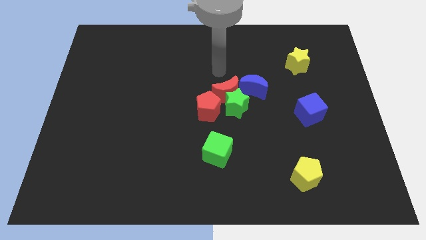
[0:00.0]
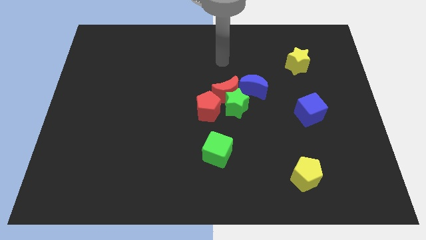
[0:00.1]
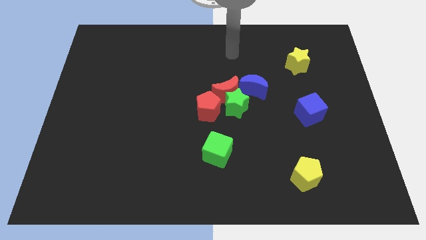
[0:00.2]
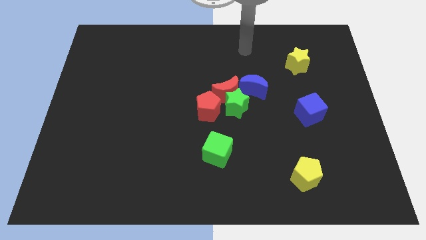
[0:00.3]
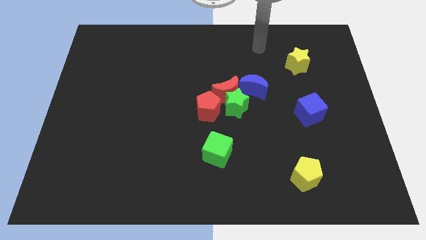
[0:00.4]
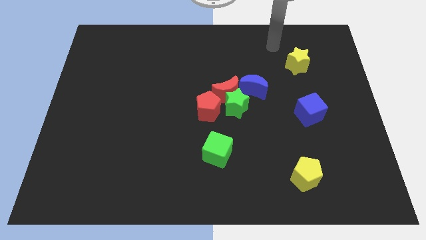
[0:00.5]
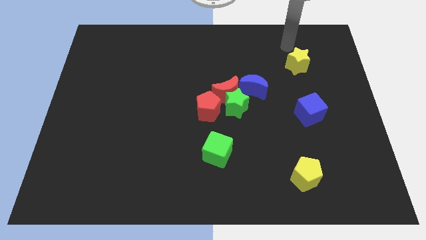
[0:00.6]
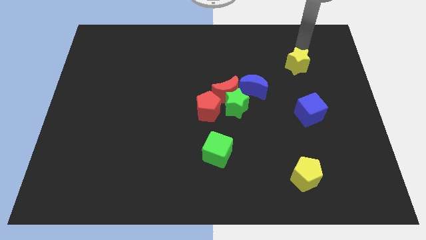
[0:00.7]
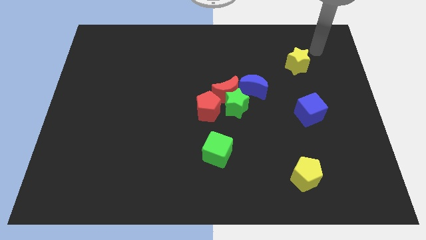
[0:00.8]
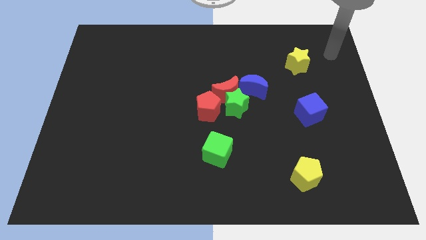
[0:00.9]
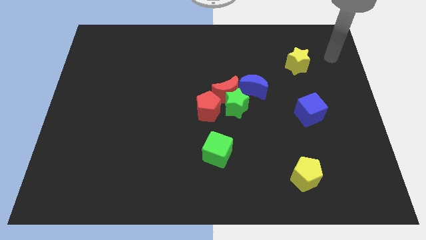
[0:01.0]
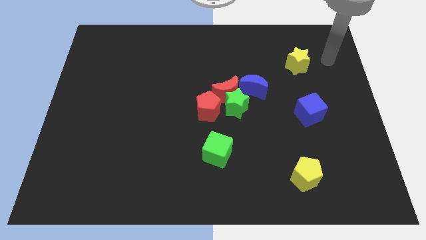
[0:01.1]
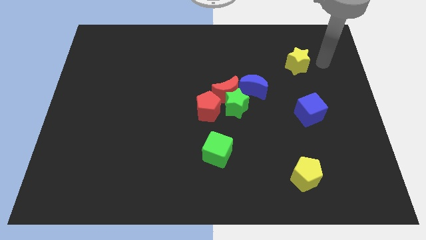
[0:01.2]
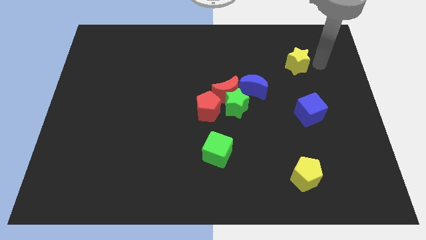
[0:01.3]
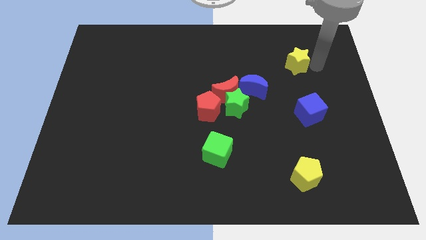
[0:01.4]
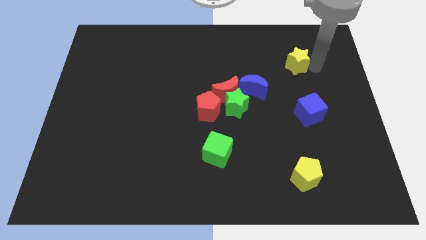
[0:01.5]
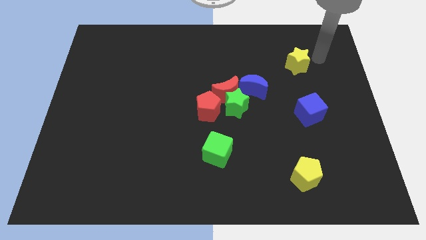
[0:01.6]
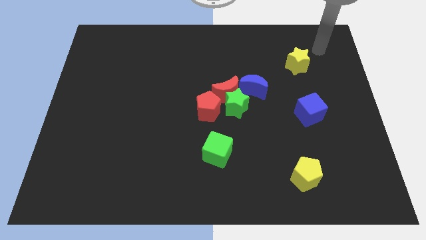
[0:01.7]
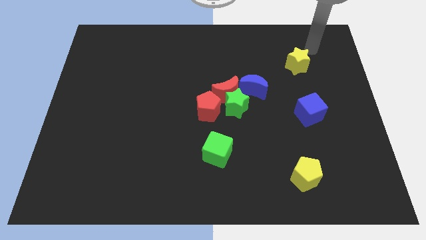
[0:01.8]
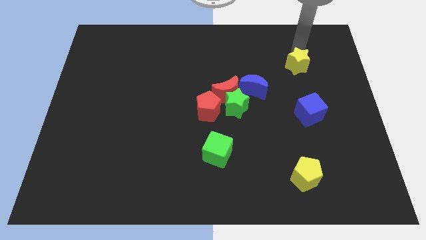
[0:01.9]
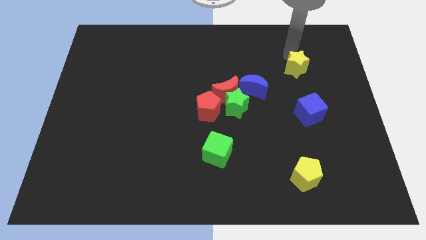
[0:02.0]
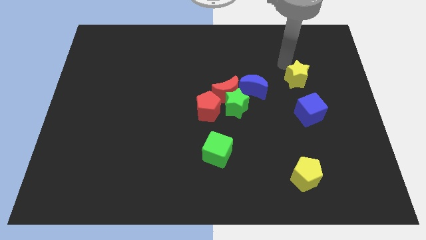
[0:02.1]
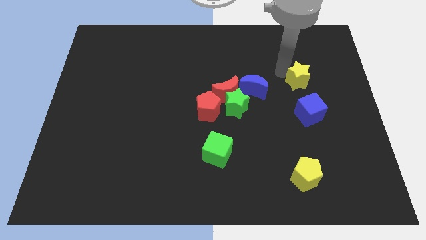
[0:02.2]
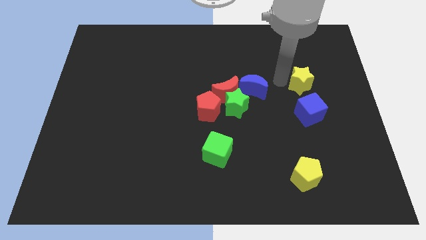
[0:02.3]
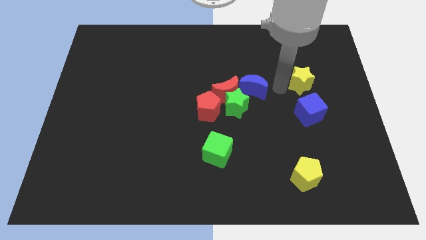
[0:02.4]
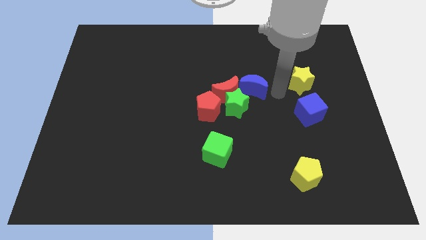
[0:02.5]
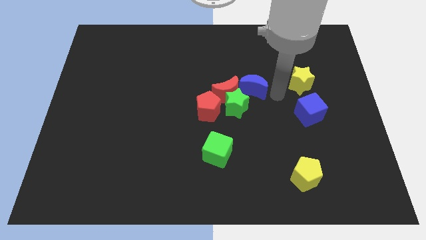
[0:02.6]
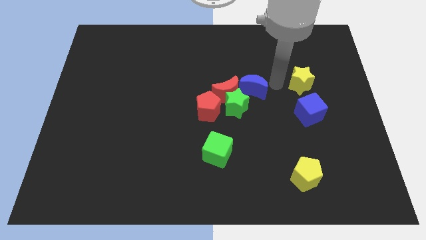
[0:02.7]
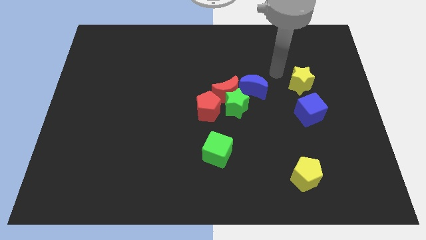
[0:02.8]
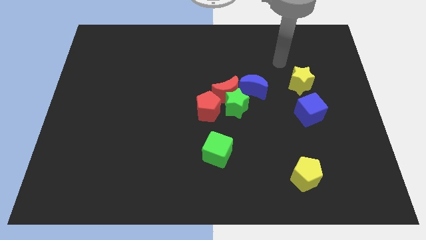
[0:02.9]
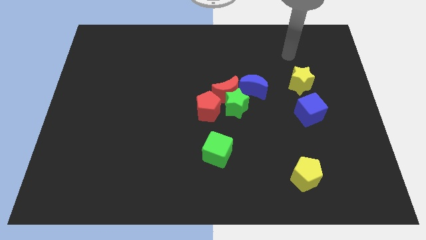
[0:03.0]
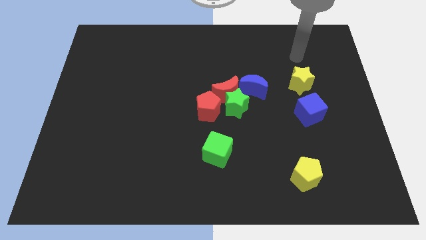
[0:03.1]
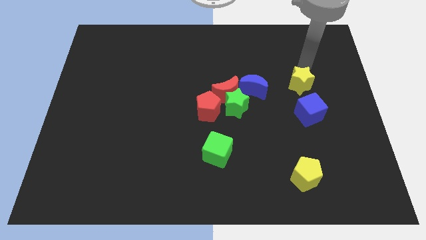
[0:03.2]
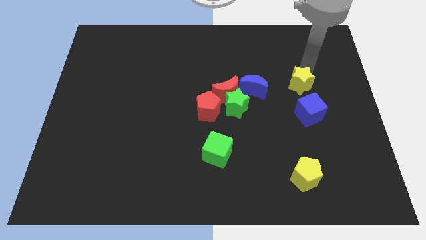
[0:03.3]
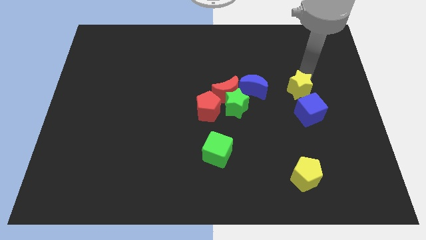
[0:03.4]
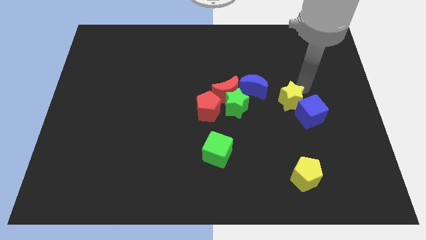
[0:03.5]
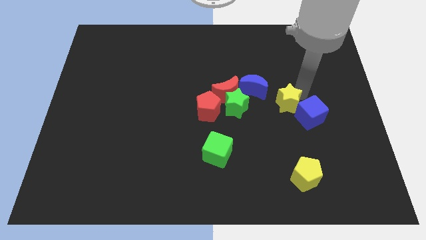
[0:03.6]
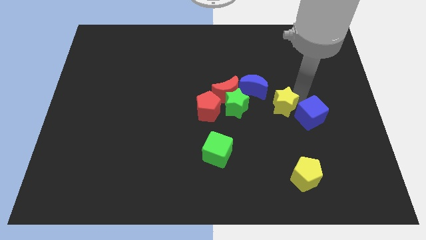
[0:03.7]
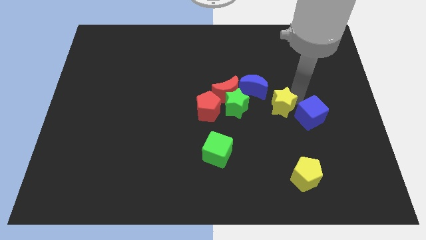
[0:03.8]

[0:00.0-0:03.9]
place the yellow star diagonally in between the blue blocks

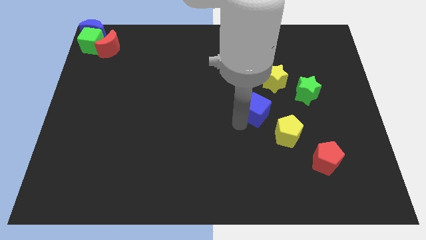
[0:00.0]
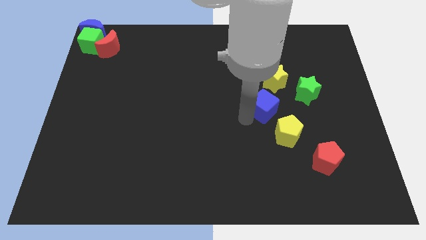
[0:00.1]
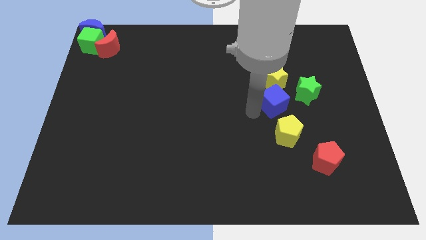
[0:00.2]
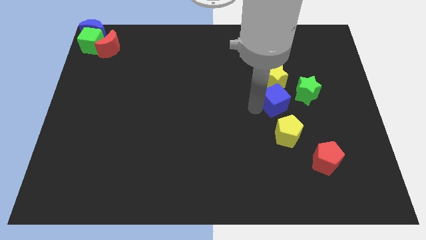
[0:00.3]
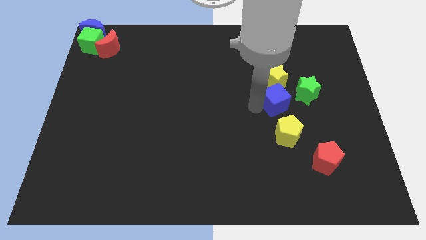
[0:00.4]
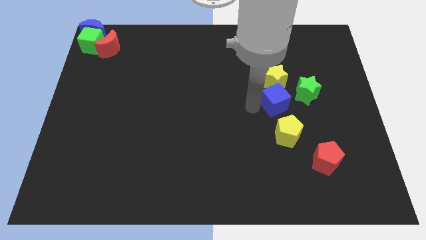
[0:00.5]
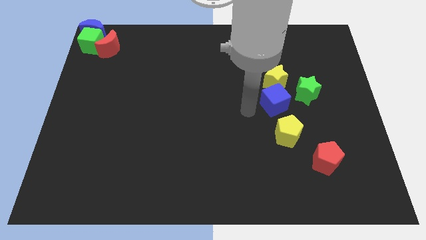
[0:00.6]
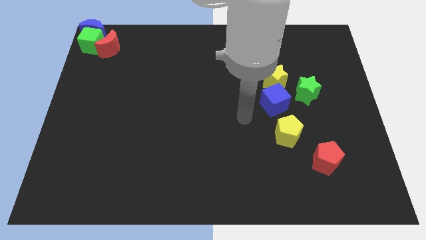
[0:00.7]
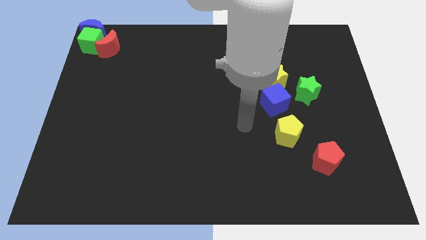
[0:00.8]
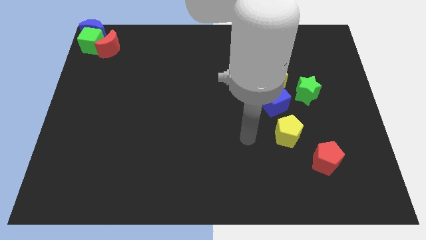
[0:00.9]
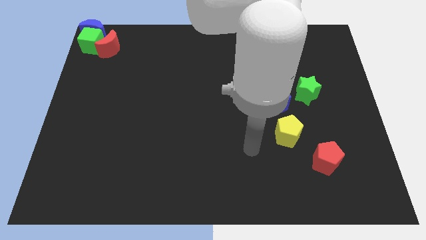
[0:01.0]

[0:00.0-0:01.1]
move blue cube towards yellow star

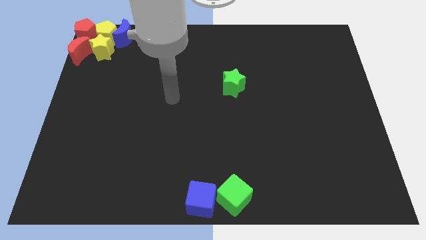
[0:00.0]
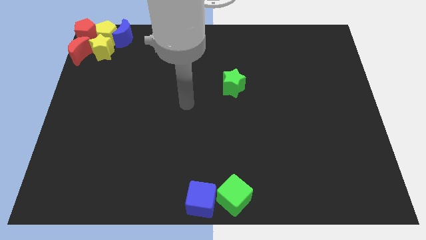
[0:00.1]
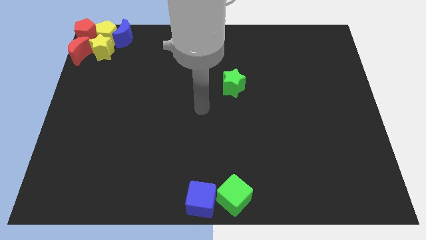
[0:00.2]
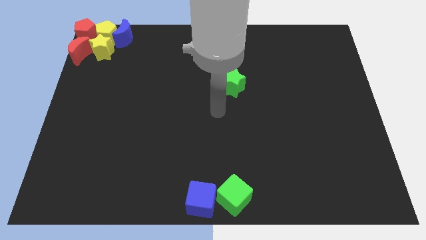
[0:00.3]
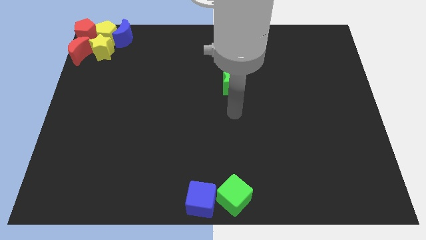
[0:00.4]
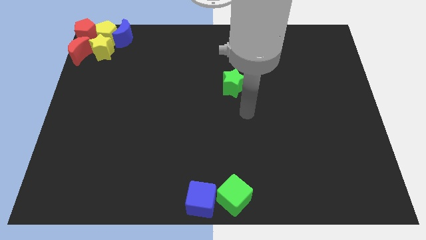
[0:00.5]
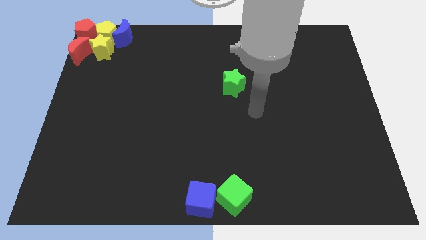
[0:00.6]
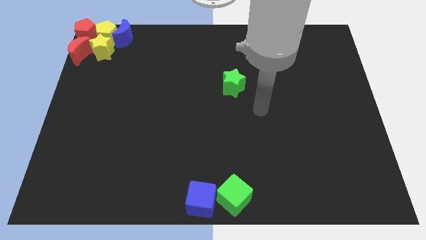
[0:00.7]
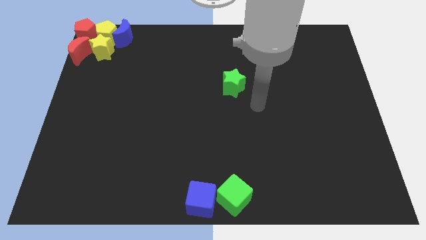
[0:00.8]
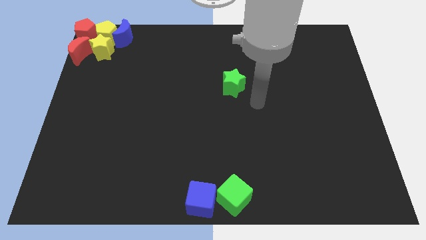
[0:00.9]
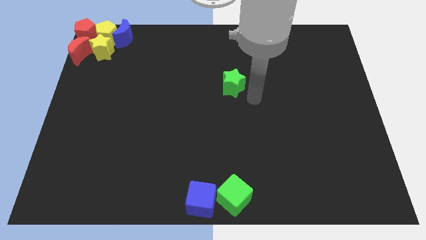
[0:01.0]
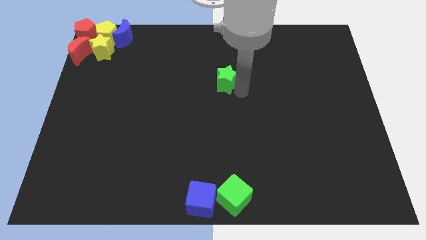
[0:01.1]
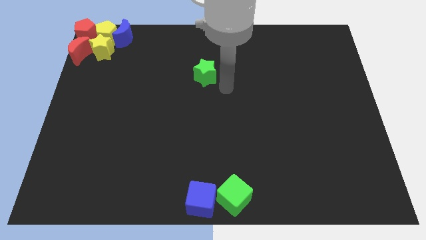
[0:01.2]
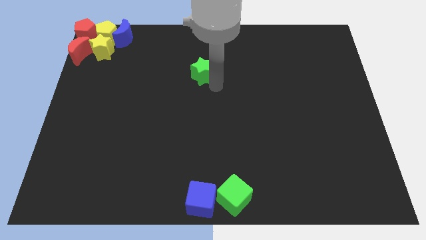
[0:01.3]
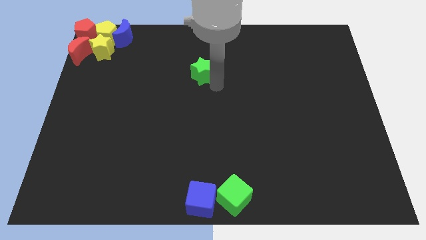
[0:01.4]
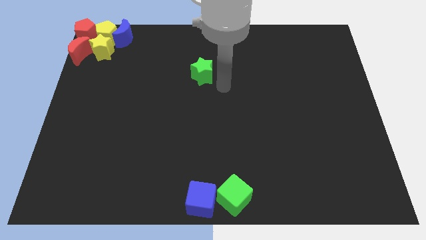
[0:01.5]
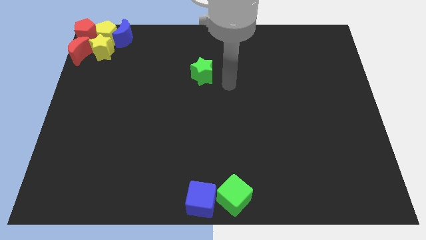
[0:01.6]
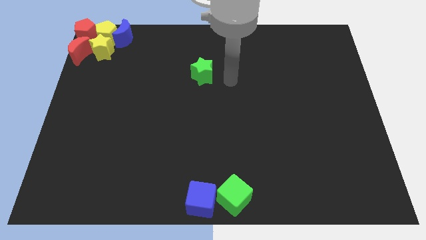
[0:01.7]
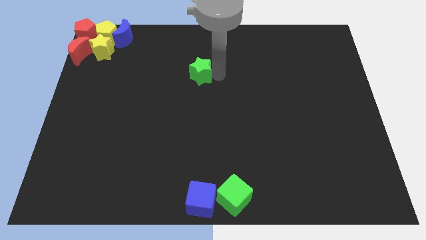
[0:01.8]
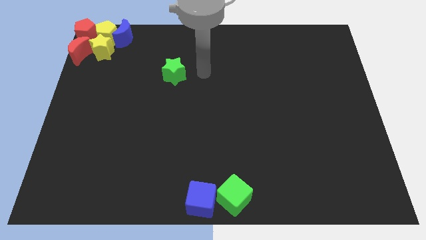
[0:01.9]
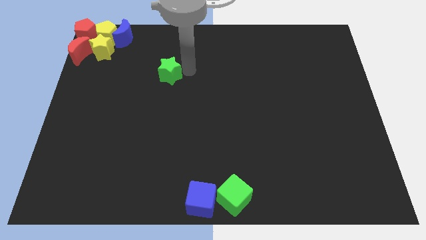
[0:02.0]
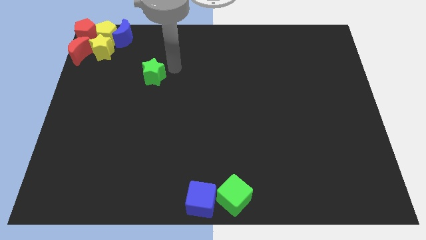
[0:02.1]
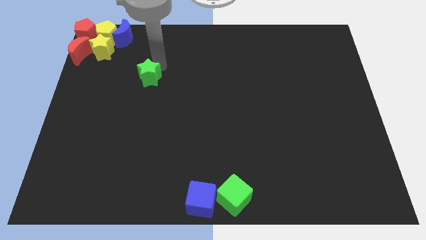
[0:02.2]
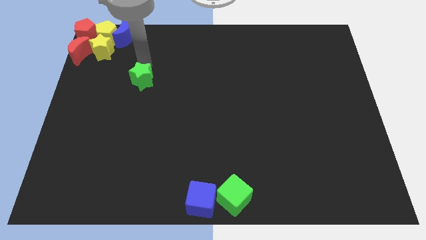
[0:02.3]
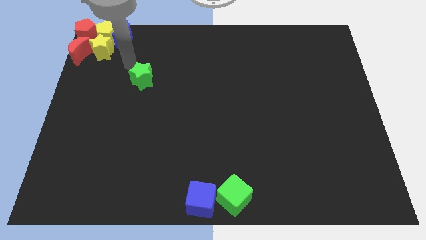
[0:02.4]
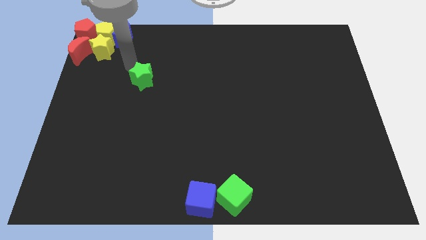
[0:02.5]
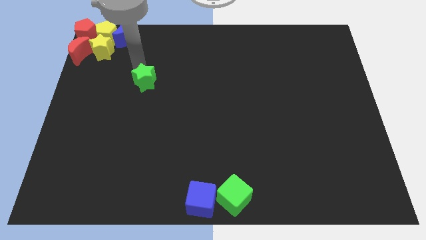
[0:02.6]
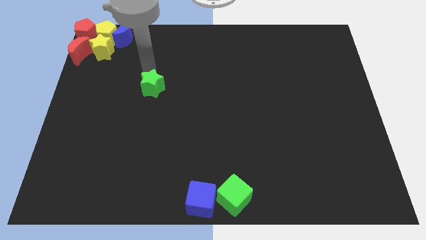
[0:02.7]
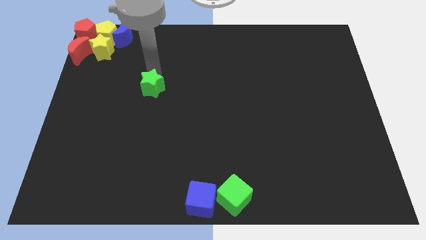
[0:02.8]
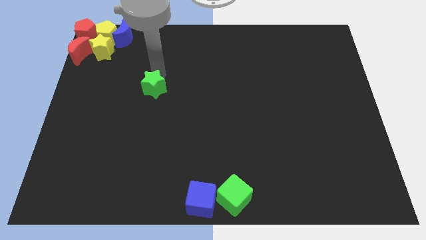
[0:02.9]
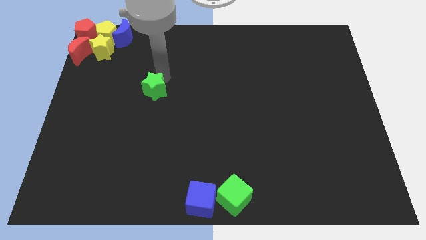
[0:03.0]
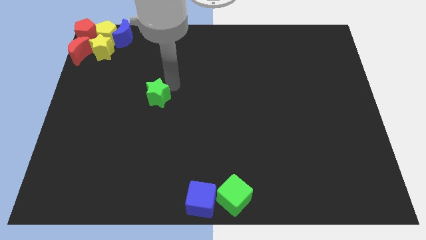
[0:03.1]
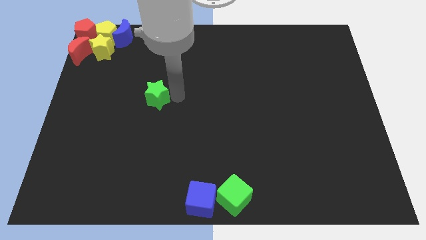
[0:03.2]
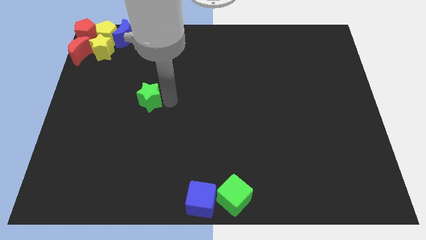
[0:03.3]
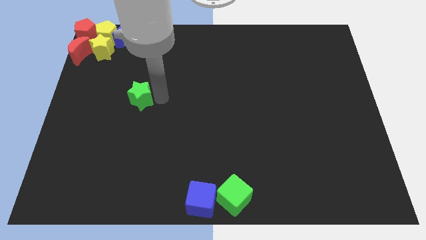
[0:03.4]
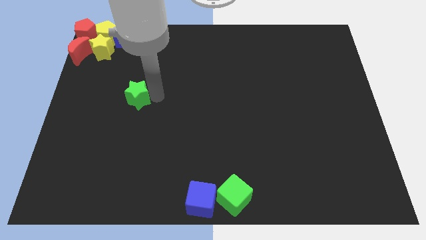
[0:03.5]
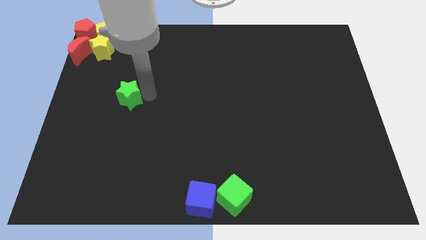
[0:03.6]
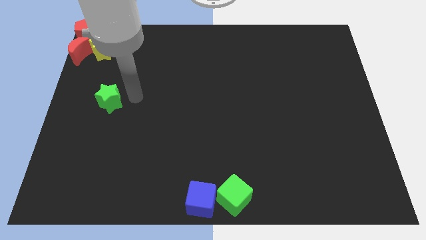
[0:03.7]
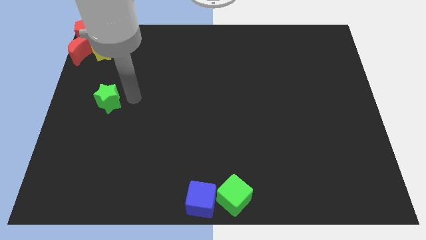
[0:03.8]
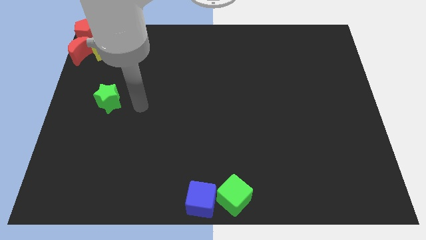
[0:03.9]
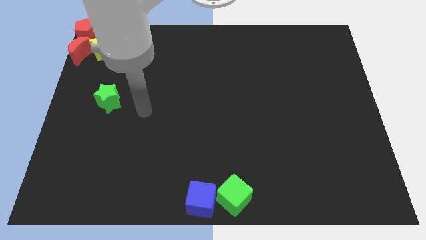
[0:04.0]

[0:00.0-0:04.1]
drag the green star to the vertical bottom side of the yellow star
